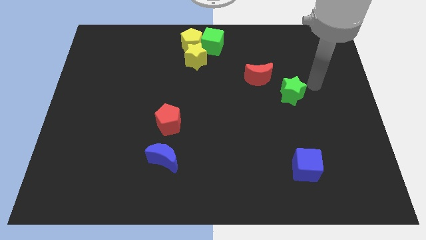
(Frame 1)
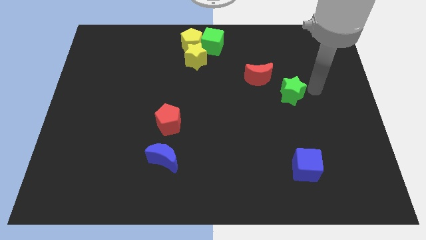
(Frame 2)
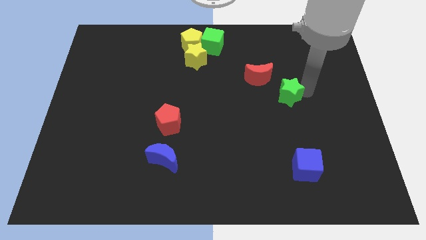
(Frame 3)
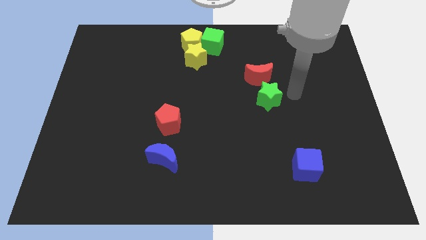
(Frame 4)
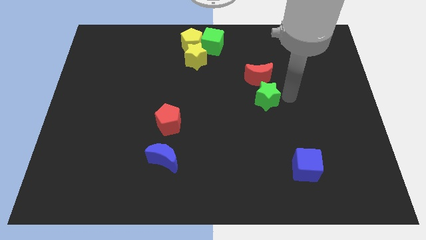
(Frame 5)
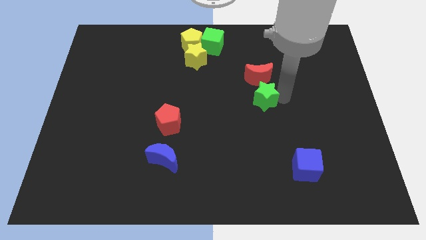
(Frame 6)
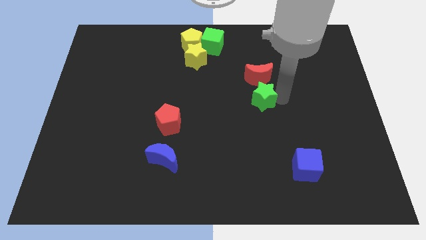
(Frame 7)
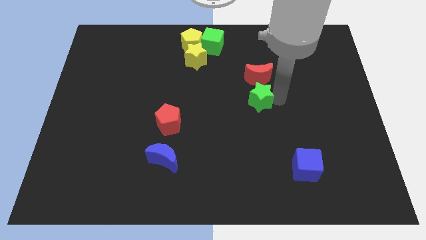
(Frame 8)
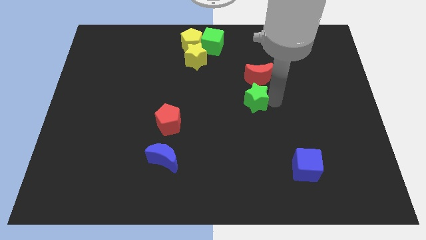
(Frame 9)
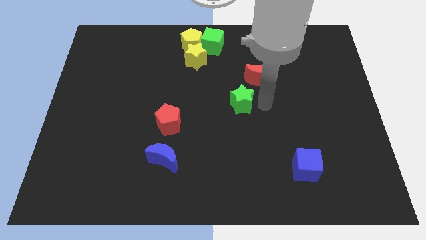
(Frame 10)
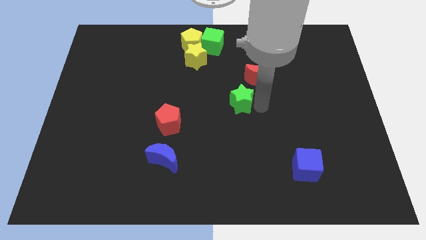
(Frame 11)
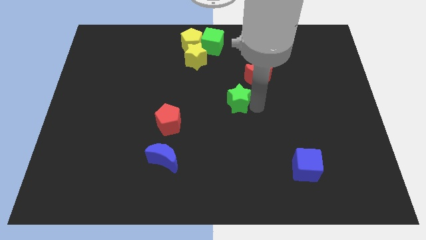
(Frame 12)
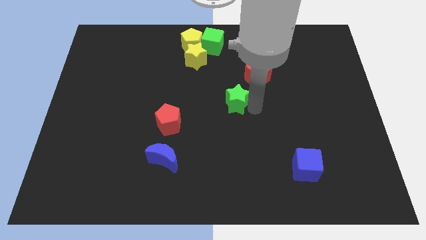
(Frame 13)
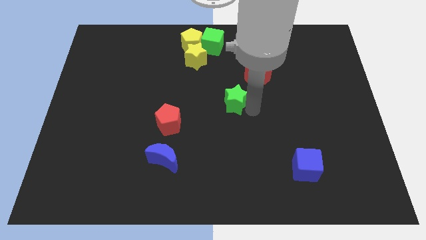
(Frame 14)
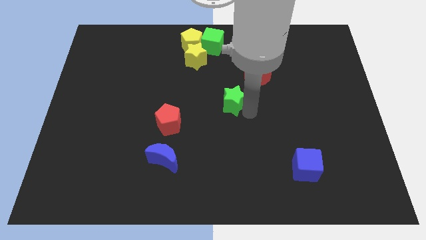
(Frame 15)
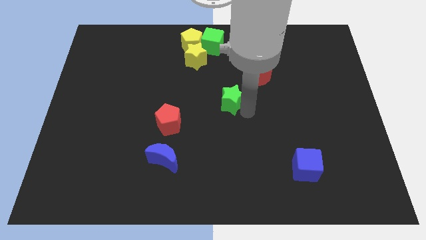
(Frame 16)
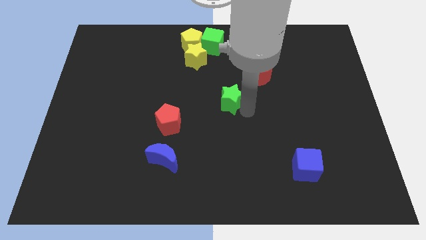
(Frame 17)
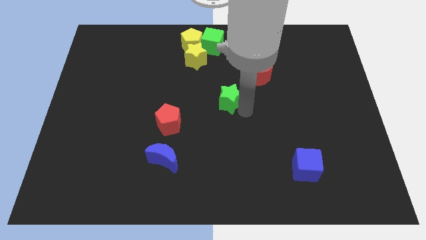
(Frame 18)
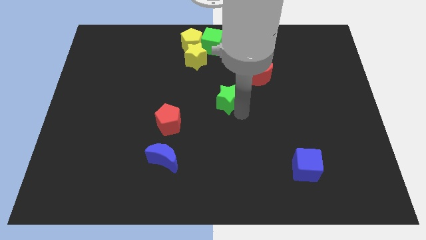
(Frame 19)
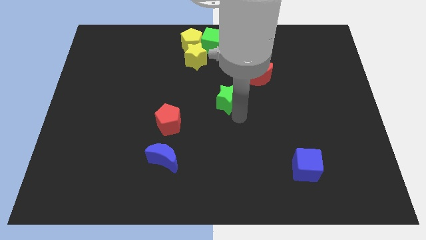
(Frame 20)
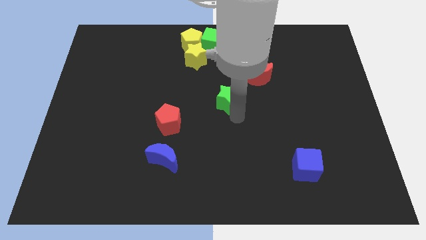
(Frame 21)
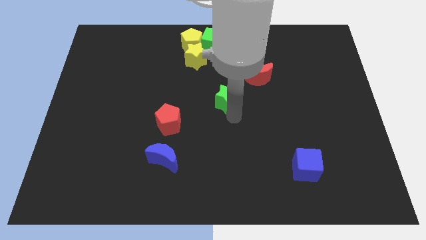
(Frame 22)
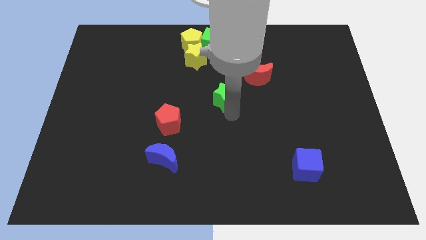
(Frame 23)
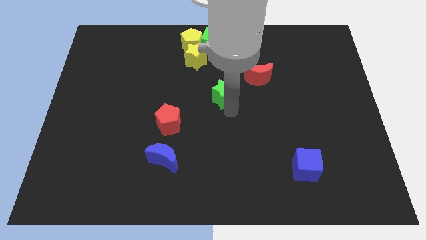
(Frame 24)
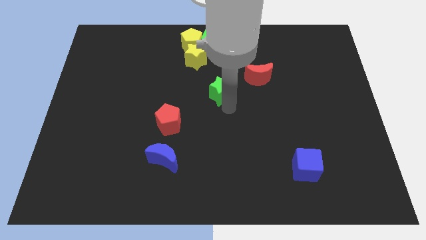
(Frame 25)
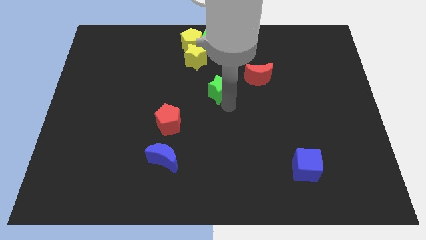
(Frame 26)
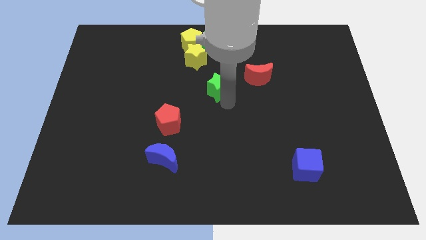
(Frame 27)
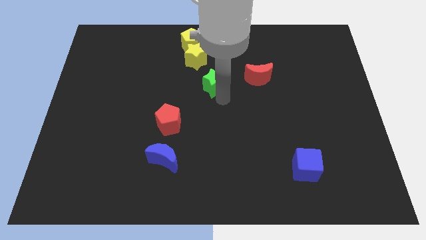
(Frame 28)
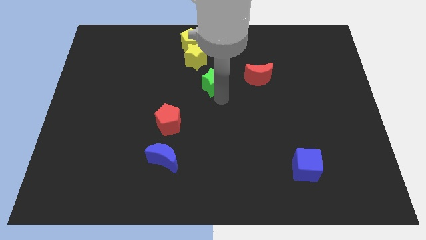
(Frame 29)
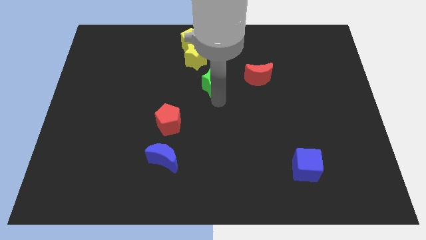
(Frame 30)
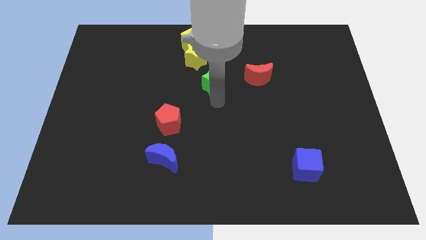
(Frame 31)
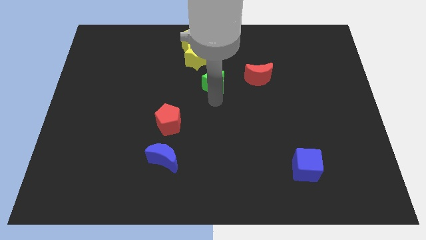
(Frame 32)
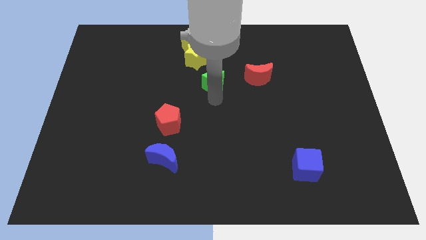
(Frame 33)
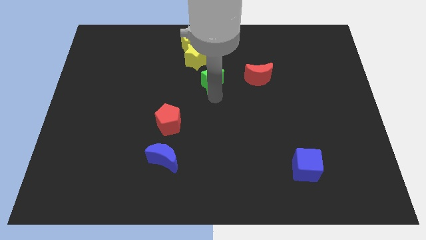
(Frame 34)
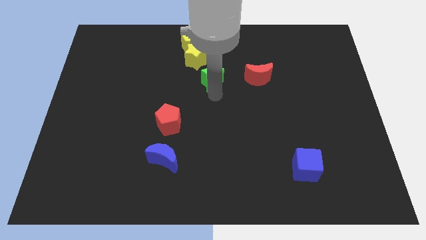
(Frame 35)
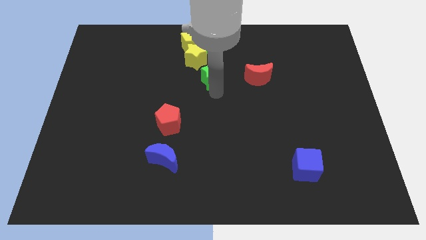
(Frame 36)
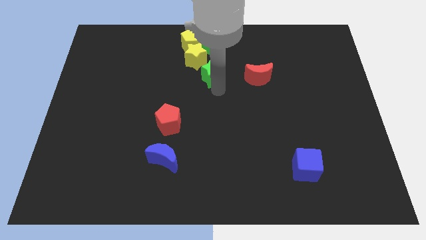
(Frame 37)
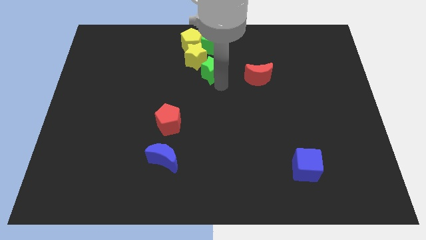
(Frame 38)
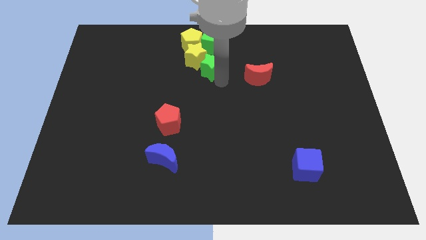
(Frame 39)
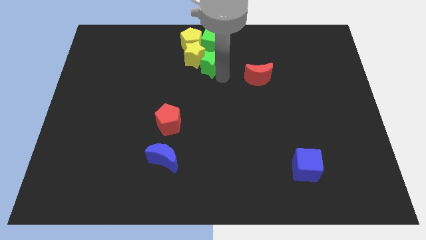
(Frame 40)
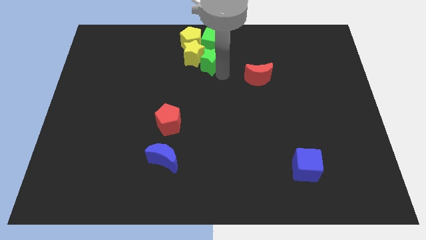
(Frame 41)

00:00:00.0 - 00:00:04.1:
add green star into yellow star

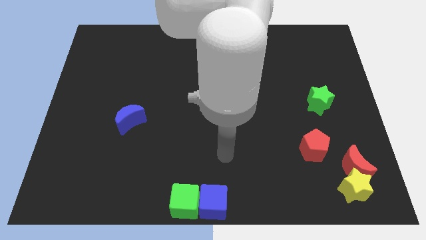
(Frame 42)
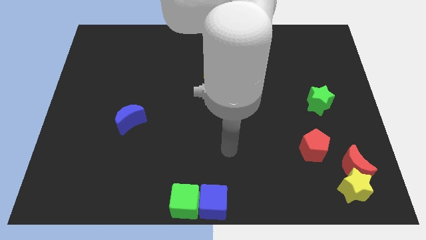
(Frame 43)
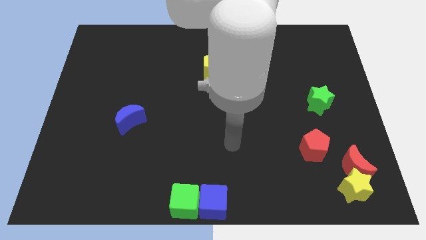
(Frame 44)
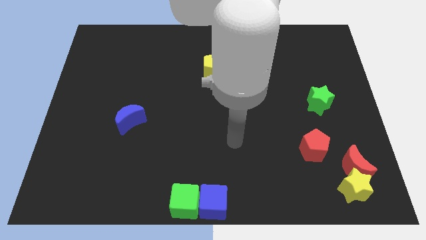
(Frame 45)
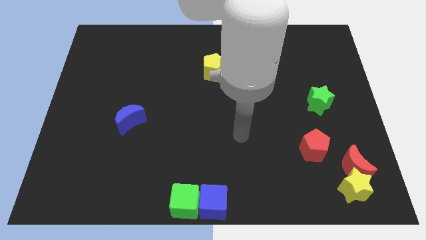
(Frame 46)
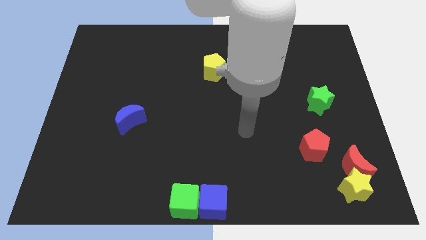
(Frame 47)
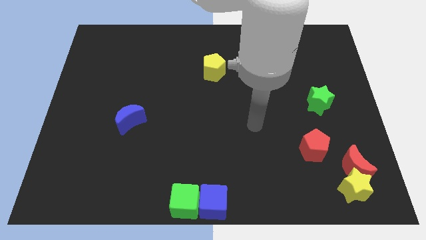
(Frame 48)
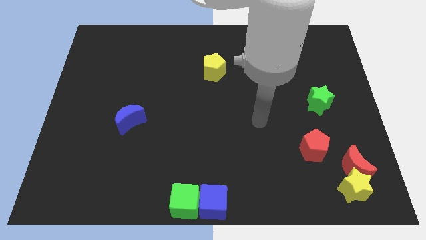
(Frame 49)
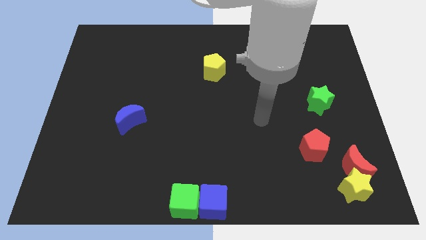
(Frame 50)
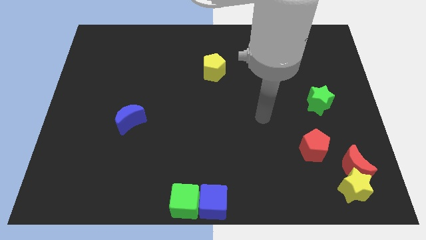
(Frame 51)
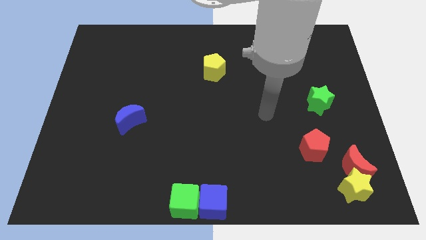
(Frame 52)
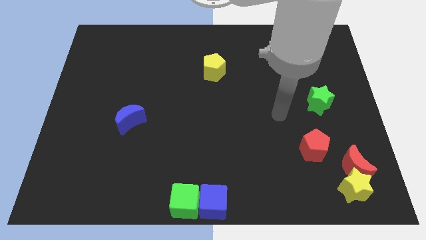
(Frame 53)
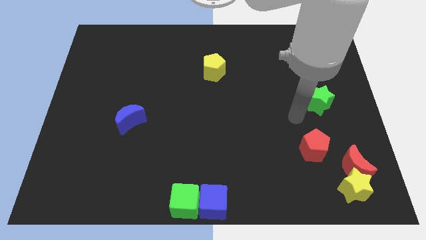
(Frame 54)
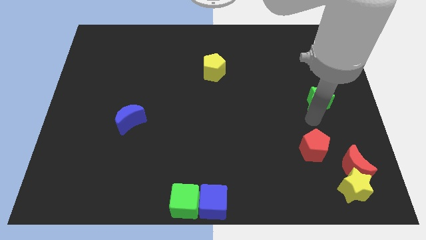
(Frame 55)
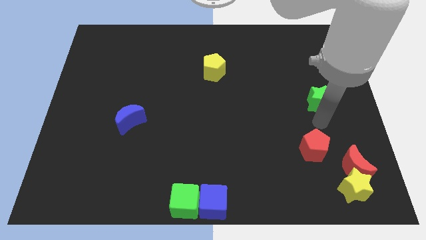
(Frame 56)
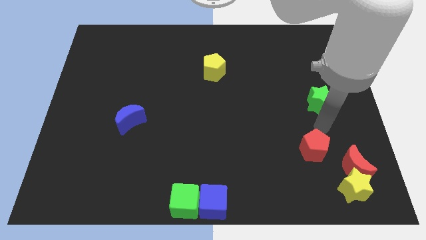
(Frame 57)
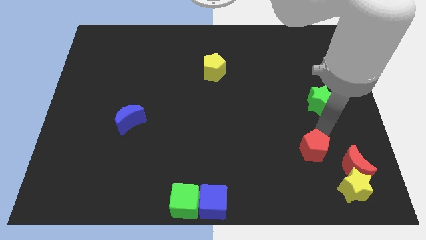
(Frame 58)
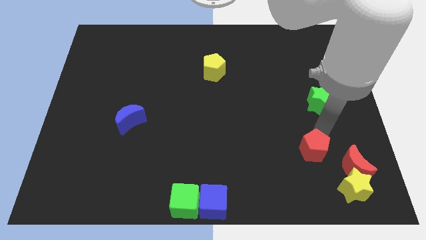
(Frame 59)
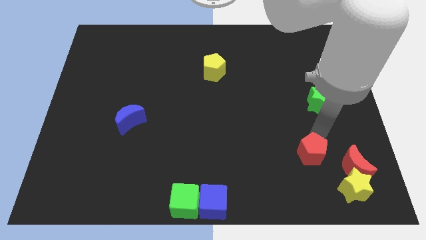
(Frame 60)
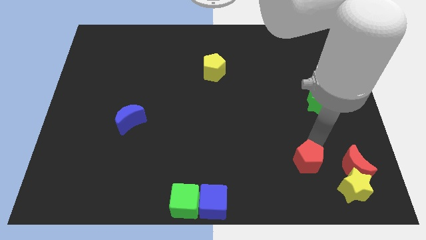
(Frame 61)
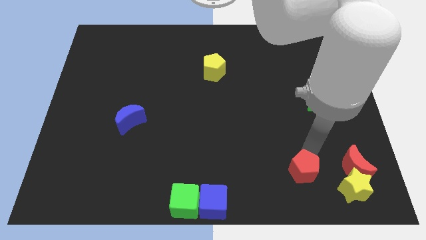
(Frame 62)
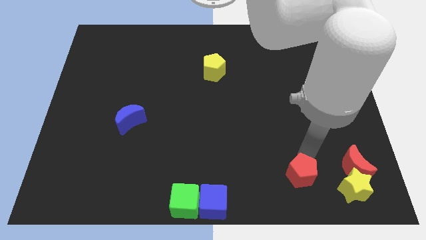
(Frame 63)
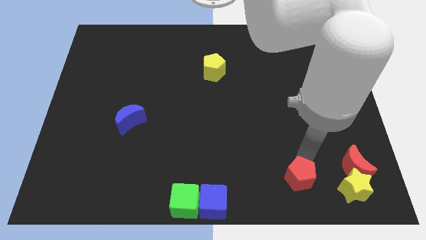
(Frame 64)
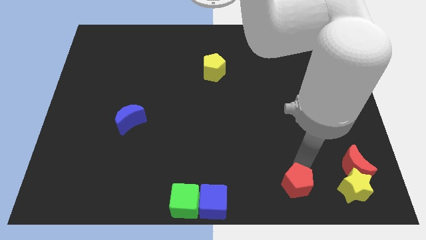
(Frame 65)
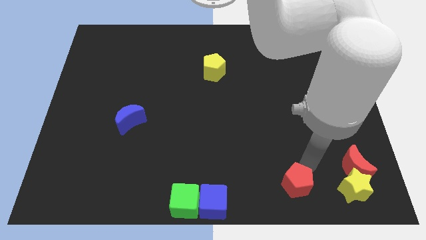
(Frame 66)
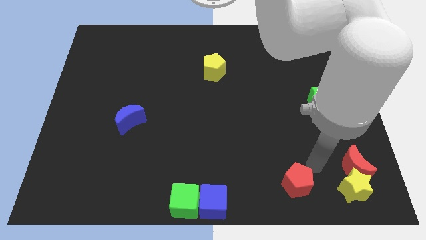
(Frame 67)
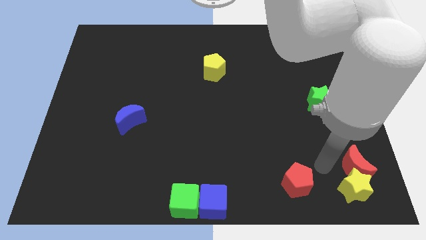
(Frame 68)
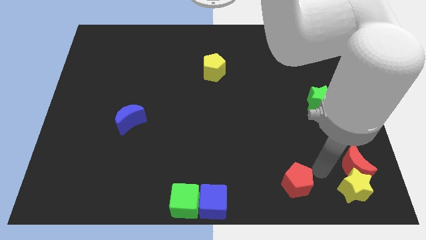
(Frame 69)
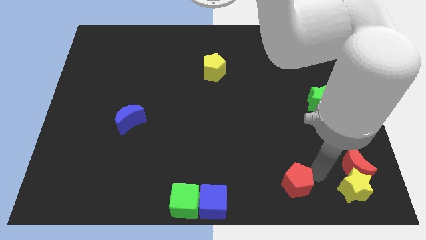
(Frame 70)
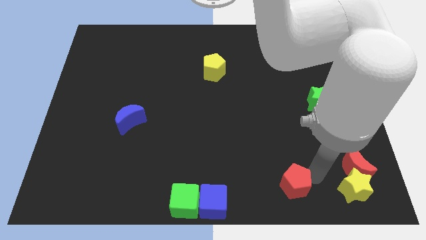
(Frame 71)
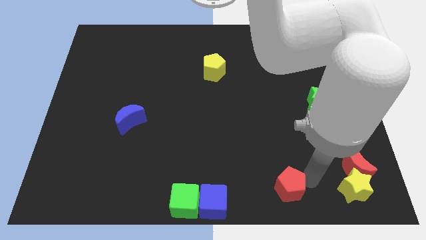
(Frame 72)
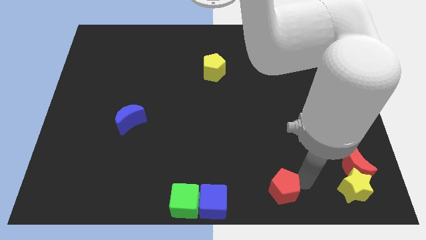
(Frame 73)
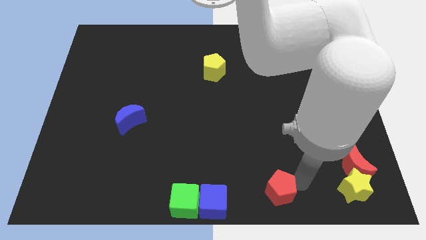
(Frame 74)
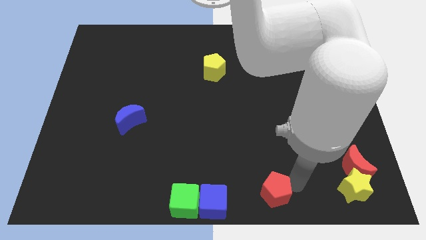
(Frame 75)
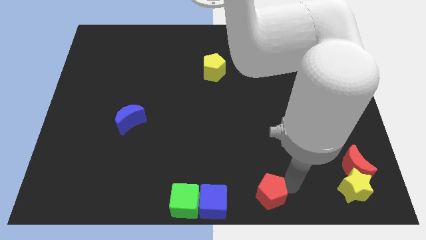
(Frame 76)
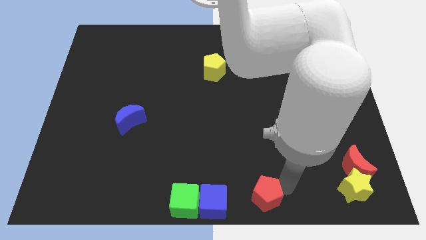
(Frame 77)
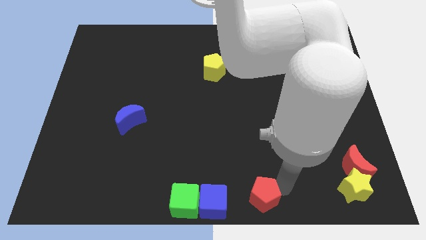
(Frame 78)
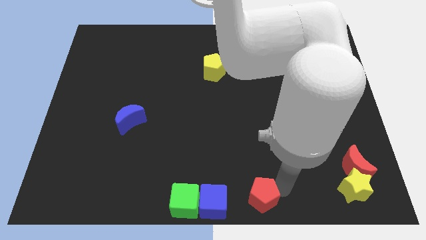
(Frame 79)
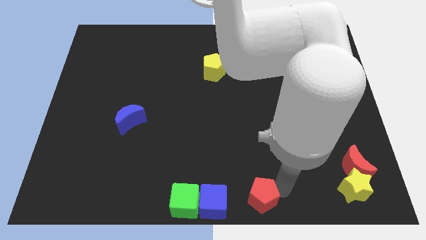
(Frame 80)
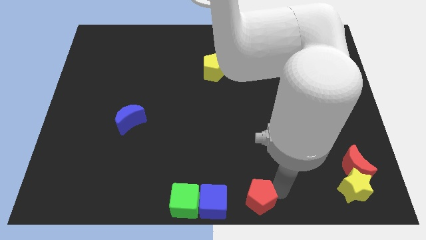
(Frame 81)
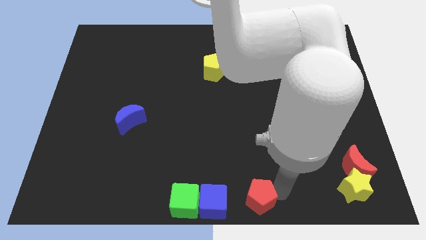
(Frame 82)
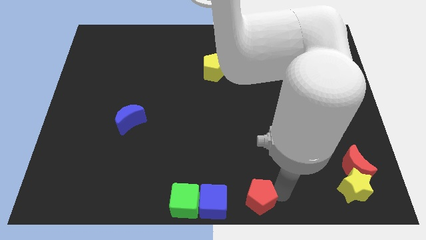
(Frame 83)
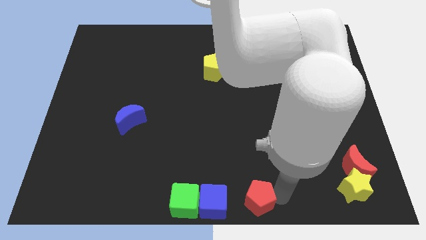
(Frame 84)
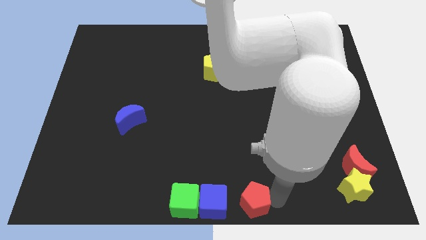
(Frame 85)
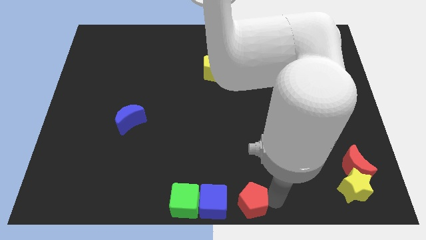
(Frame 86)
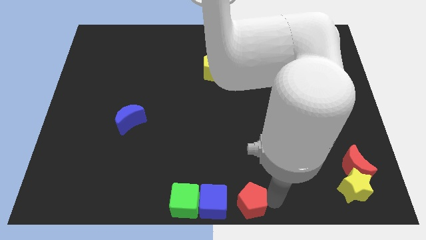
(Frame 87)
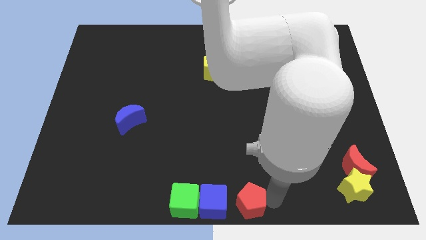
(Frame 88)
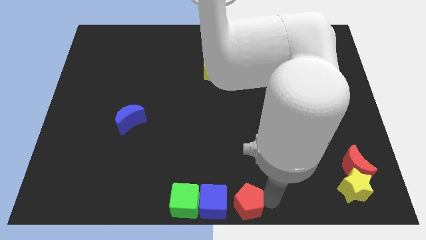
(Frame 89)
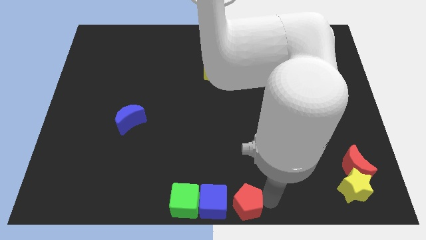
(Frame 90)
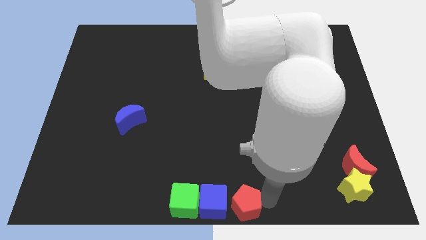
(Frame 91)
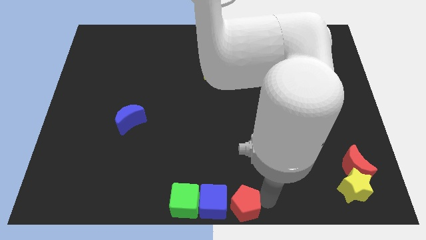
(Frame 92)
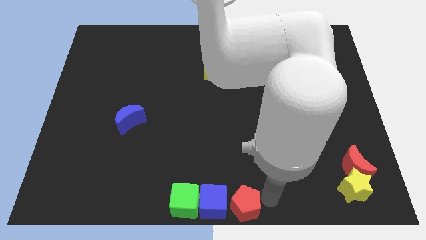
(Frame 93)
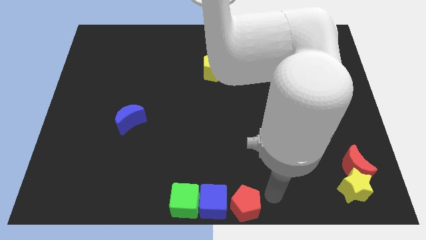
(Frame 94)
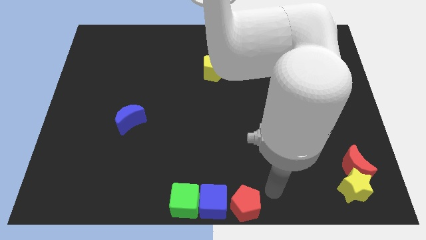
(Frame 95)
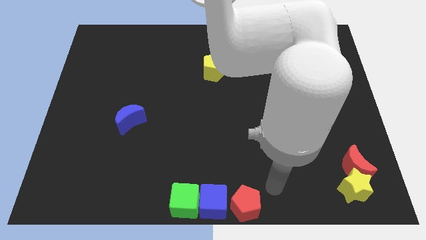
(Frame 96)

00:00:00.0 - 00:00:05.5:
push red pentagon close to blue cube
